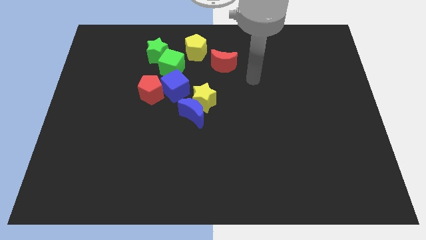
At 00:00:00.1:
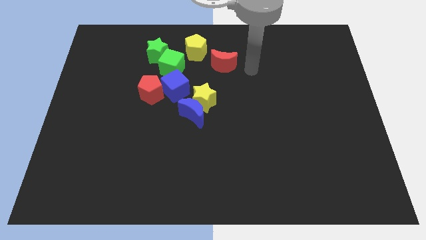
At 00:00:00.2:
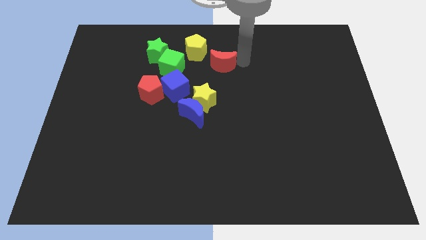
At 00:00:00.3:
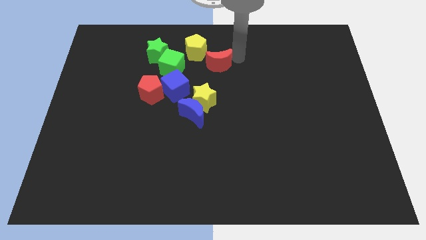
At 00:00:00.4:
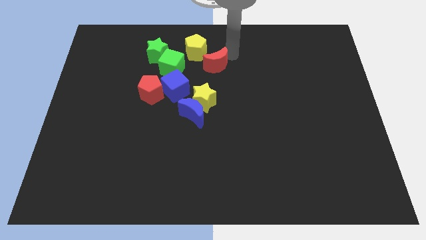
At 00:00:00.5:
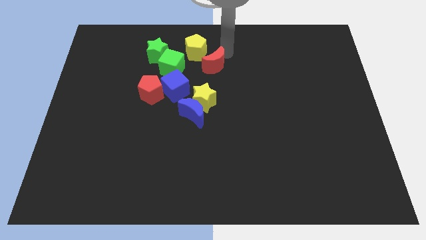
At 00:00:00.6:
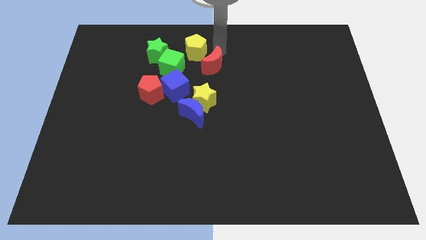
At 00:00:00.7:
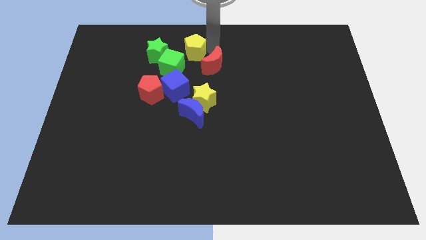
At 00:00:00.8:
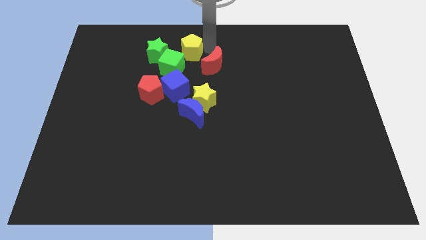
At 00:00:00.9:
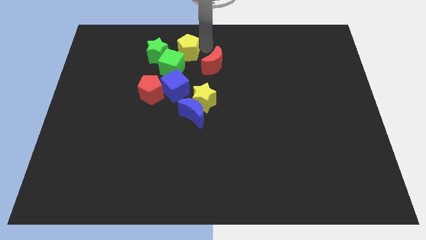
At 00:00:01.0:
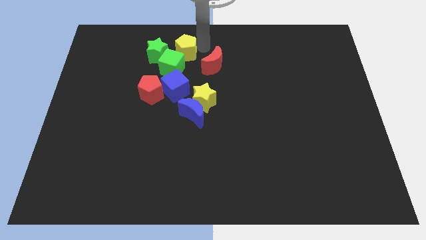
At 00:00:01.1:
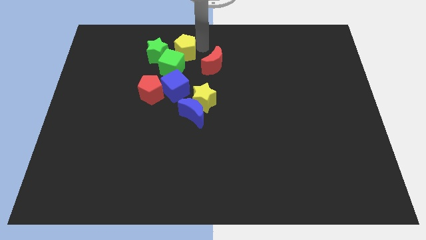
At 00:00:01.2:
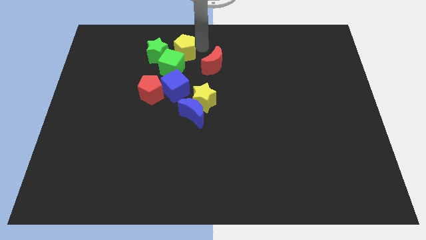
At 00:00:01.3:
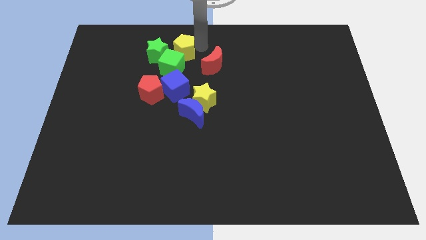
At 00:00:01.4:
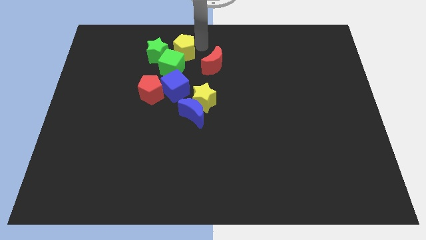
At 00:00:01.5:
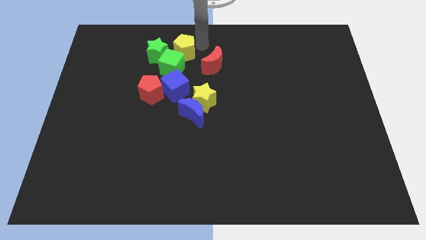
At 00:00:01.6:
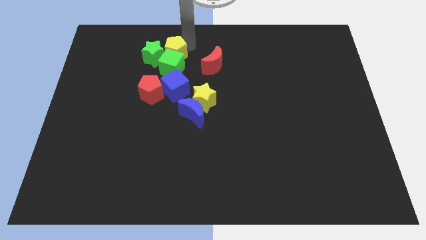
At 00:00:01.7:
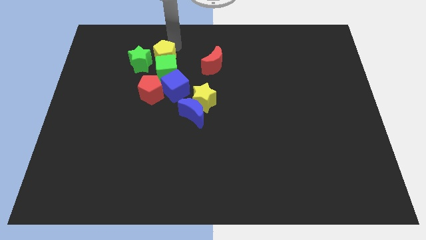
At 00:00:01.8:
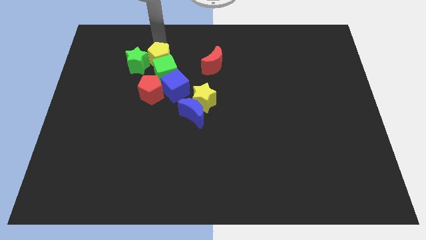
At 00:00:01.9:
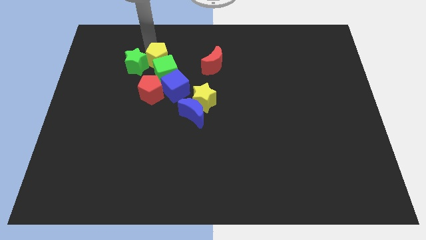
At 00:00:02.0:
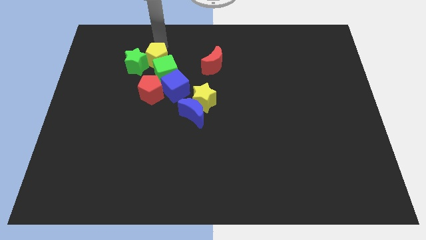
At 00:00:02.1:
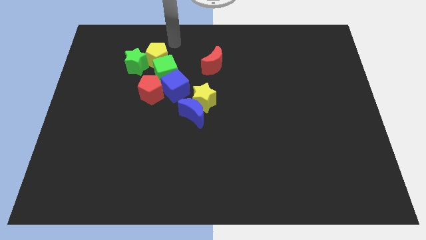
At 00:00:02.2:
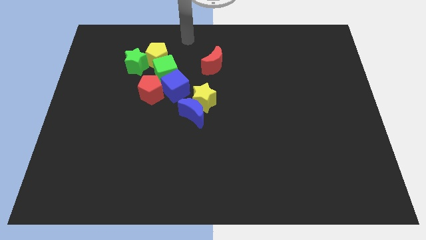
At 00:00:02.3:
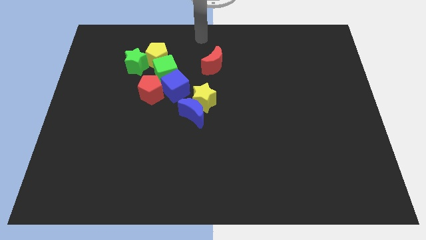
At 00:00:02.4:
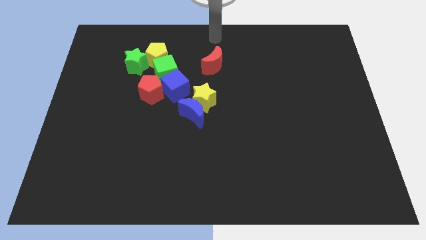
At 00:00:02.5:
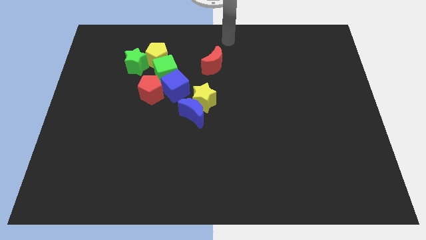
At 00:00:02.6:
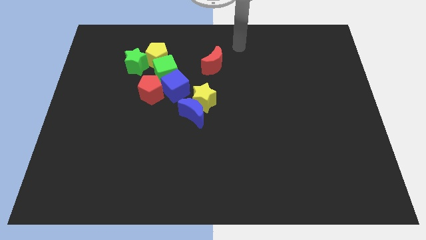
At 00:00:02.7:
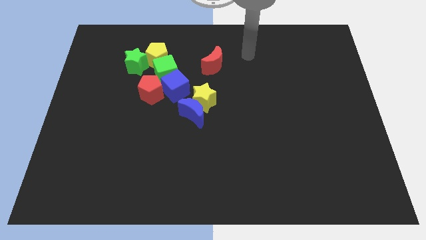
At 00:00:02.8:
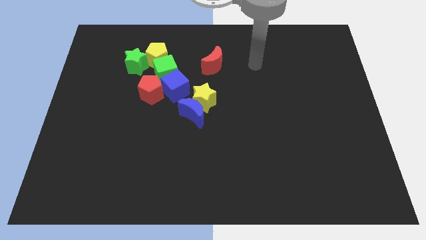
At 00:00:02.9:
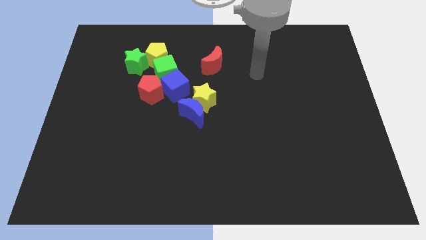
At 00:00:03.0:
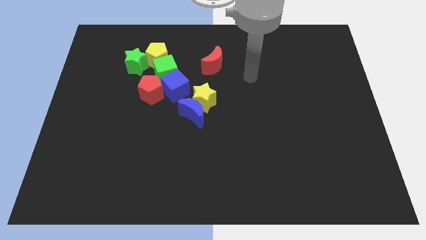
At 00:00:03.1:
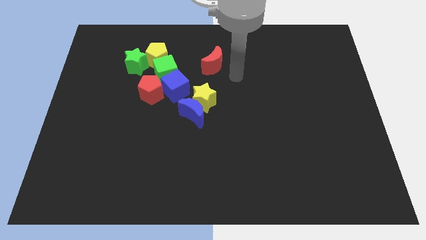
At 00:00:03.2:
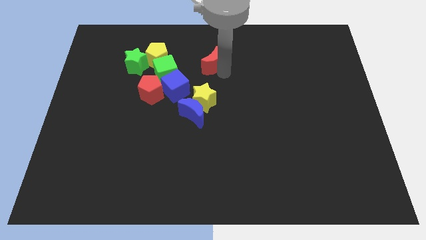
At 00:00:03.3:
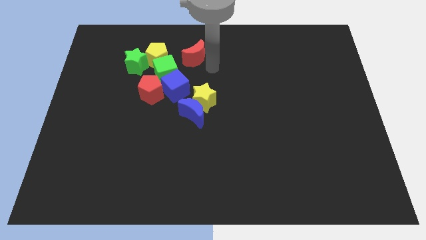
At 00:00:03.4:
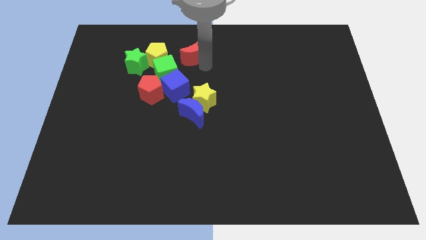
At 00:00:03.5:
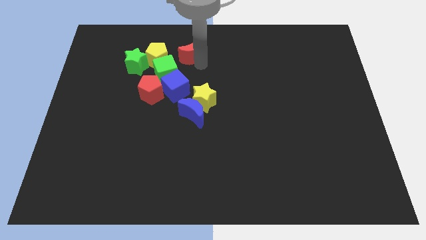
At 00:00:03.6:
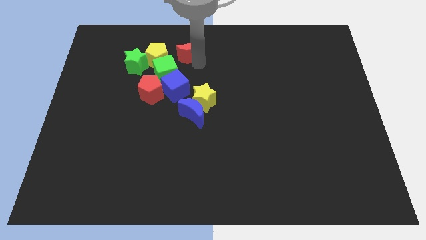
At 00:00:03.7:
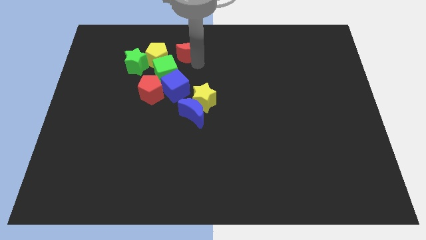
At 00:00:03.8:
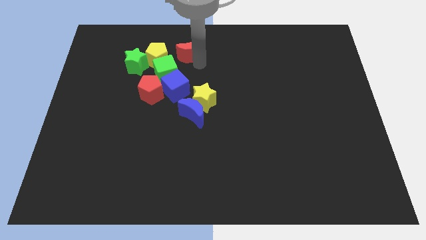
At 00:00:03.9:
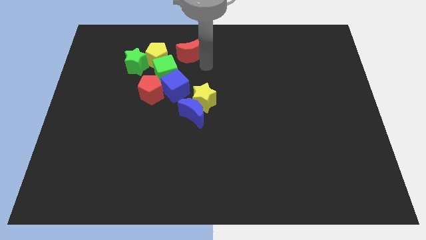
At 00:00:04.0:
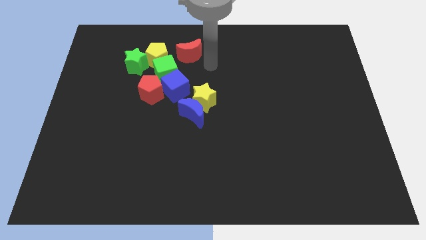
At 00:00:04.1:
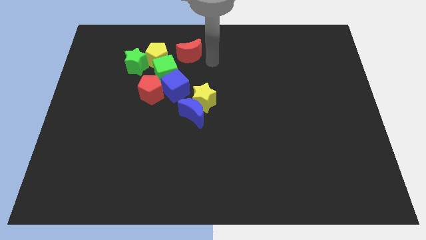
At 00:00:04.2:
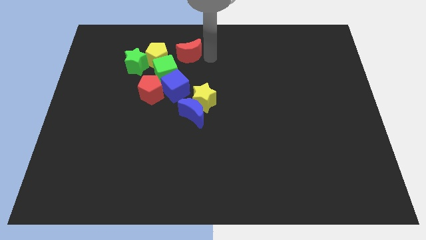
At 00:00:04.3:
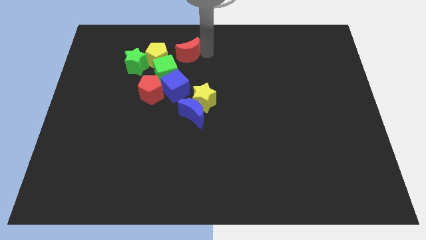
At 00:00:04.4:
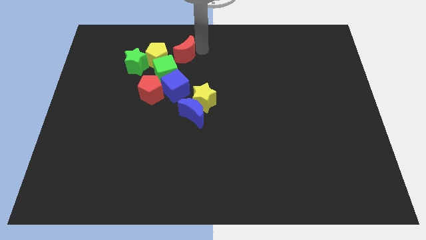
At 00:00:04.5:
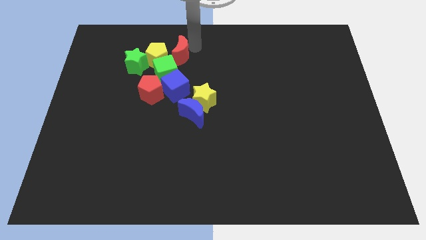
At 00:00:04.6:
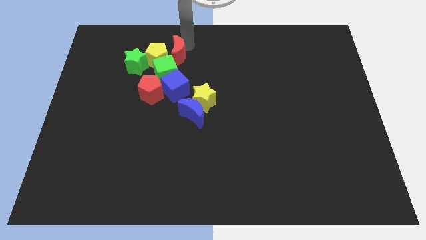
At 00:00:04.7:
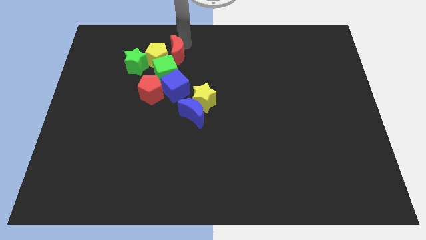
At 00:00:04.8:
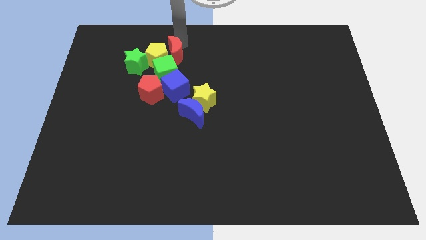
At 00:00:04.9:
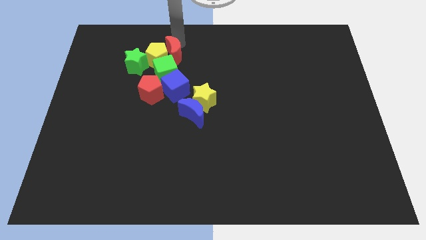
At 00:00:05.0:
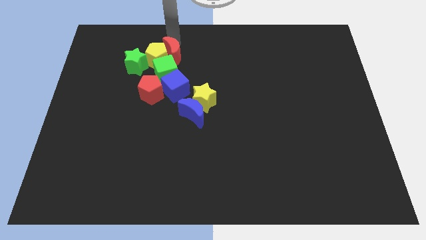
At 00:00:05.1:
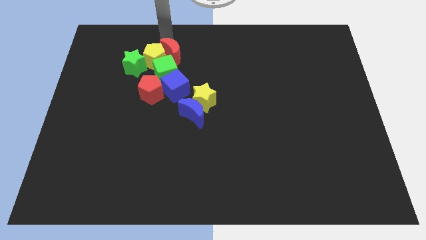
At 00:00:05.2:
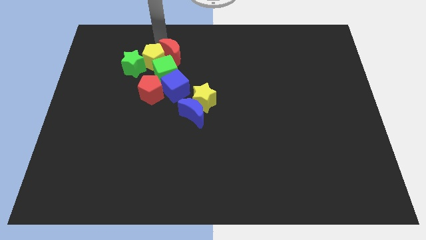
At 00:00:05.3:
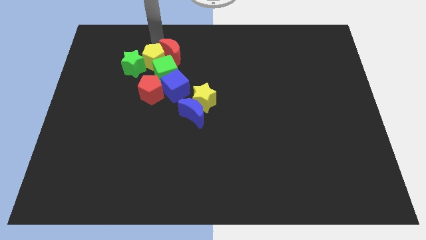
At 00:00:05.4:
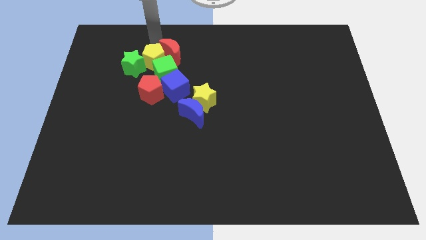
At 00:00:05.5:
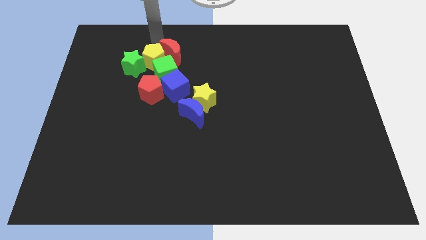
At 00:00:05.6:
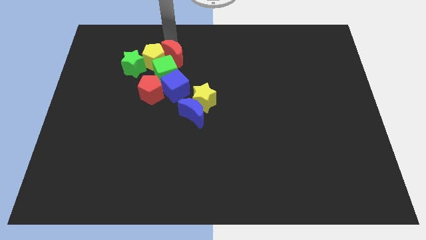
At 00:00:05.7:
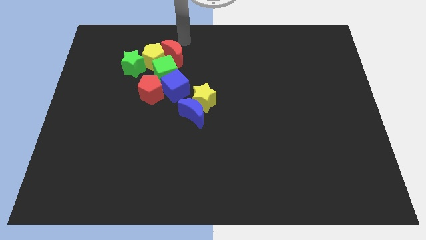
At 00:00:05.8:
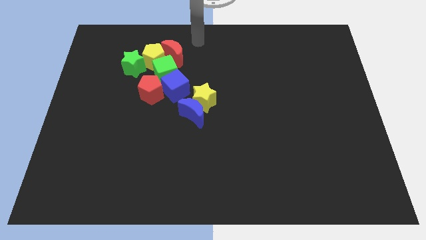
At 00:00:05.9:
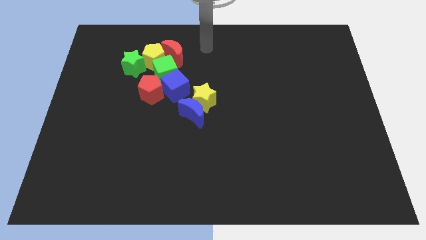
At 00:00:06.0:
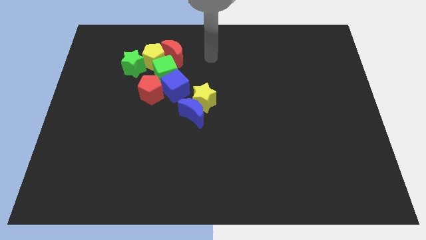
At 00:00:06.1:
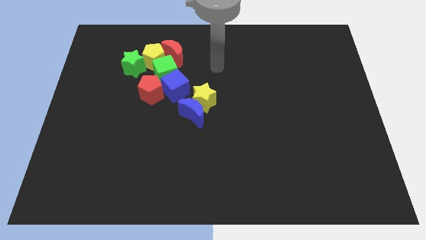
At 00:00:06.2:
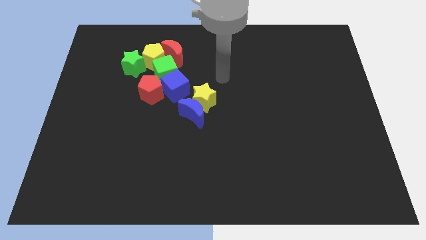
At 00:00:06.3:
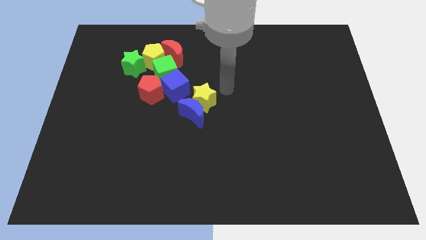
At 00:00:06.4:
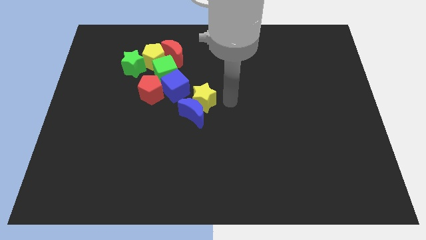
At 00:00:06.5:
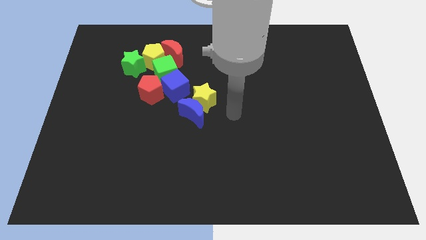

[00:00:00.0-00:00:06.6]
place the red moon close to the yellow pentagon and green cube

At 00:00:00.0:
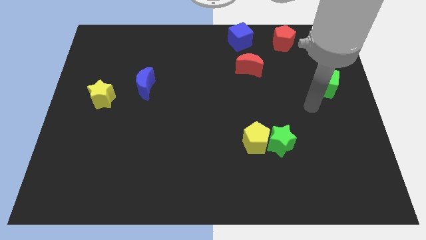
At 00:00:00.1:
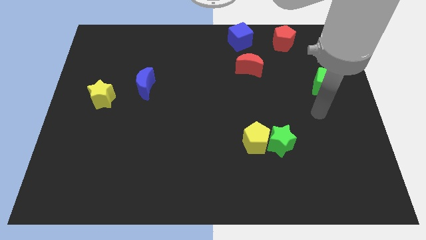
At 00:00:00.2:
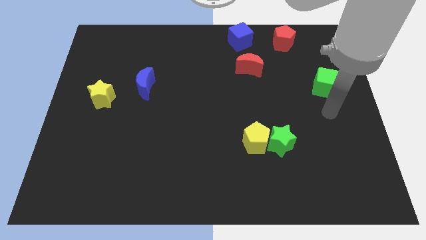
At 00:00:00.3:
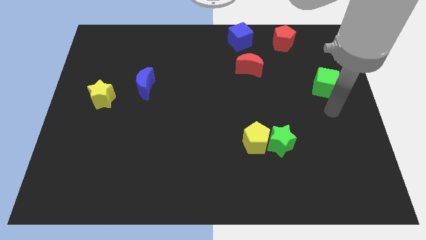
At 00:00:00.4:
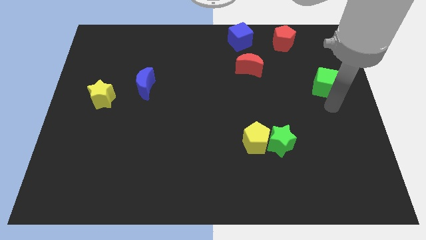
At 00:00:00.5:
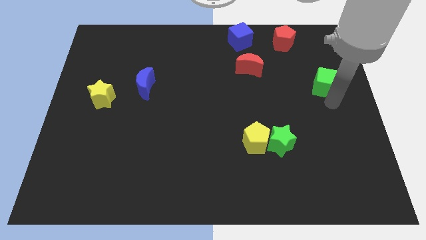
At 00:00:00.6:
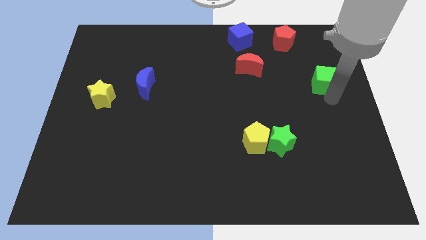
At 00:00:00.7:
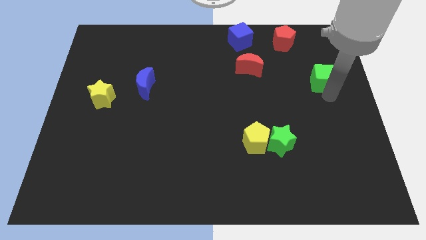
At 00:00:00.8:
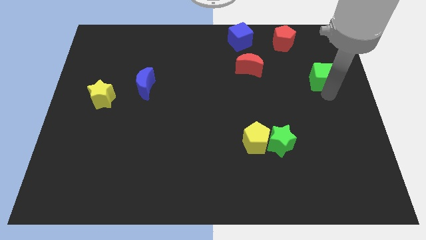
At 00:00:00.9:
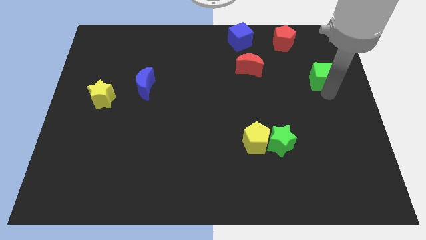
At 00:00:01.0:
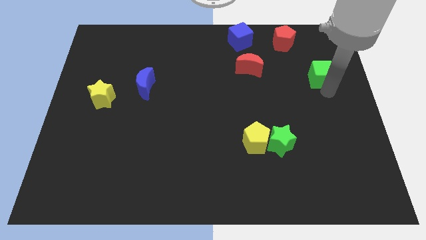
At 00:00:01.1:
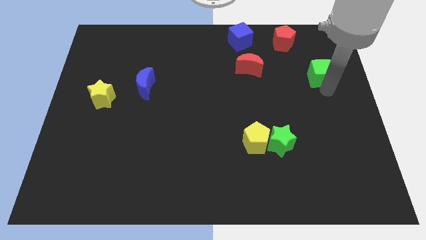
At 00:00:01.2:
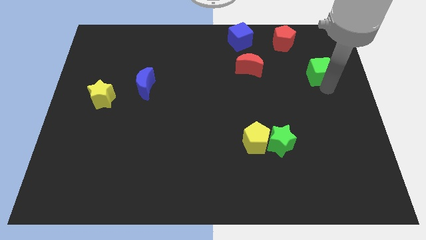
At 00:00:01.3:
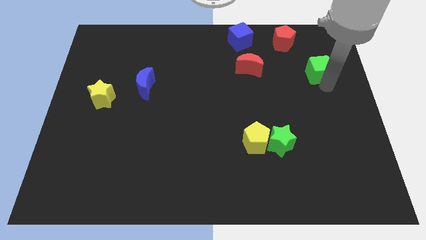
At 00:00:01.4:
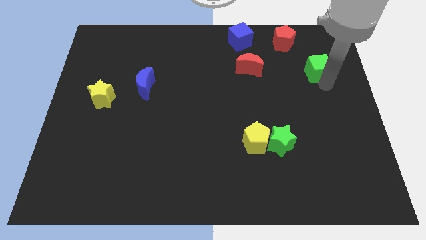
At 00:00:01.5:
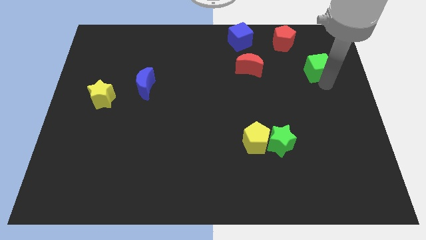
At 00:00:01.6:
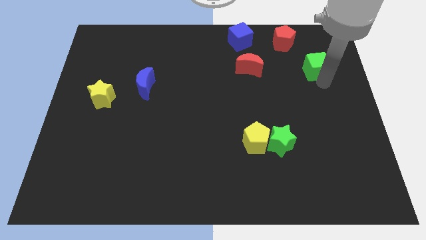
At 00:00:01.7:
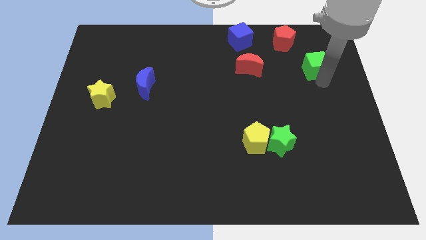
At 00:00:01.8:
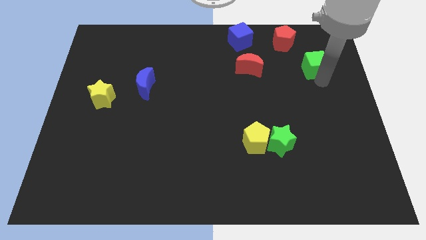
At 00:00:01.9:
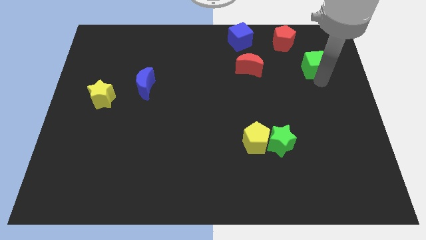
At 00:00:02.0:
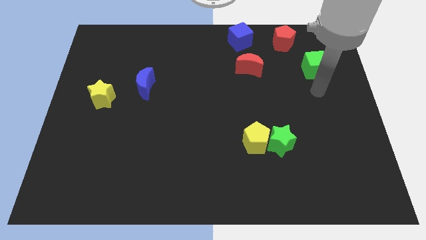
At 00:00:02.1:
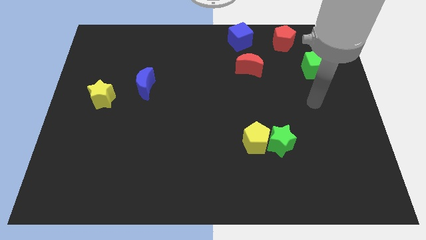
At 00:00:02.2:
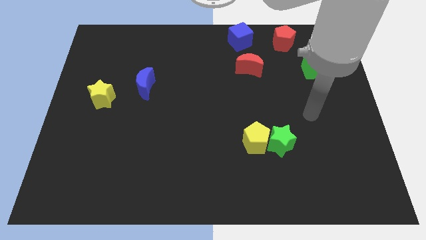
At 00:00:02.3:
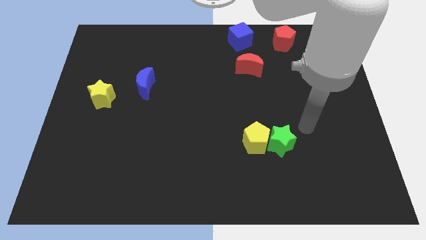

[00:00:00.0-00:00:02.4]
place the green cube to the right side of red moon
